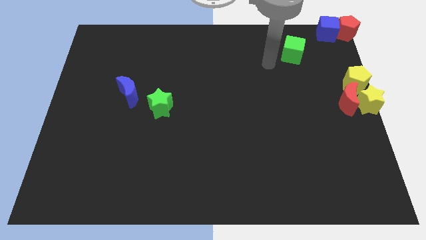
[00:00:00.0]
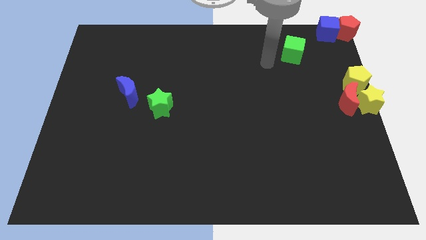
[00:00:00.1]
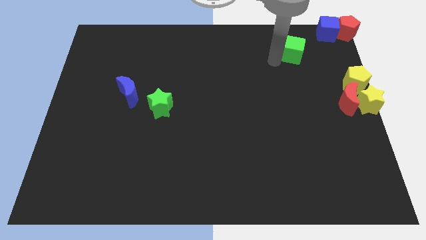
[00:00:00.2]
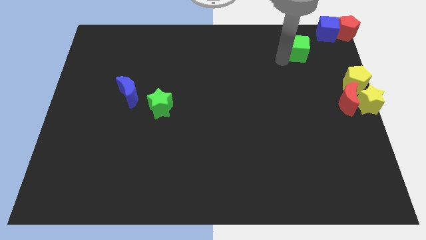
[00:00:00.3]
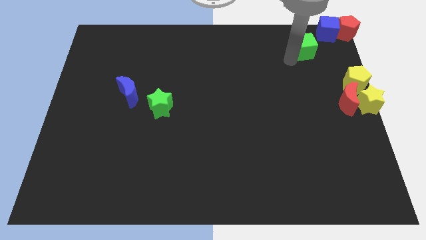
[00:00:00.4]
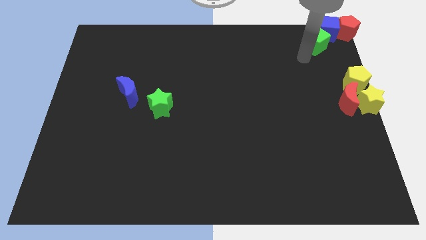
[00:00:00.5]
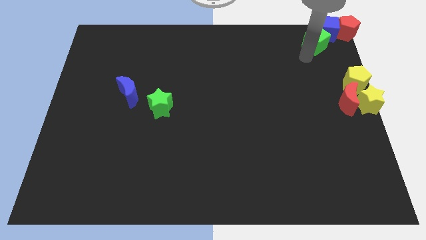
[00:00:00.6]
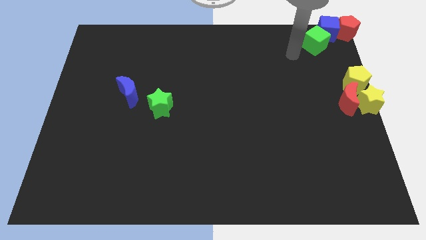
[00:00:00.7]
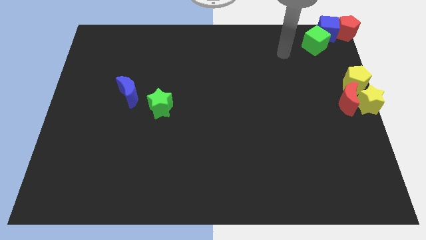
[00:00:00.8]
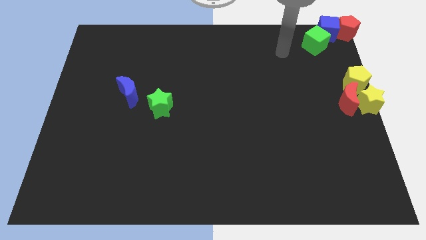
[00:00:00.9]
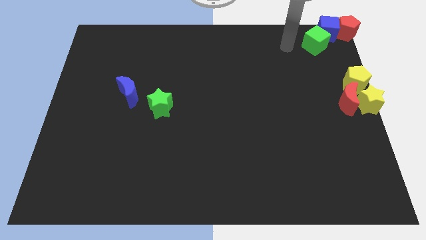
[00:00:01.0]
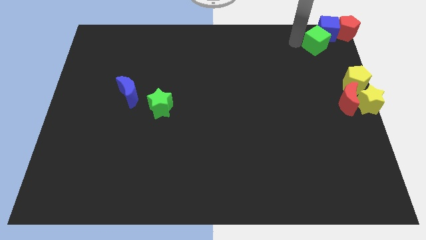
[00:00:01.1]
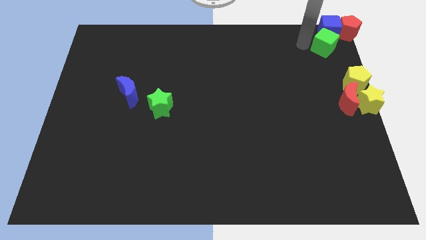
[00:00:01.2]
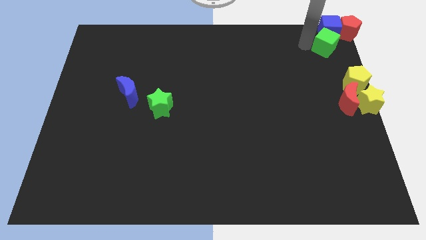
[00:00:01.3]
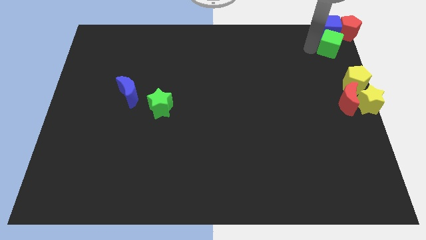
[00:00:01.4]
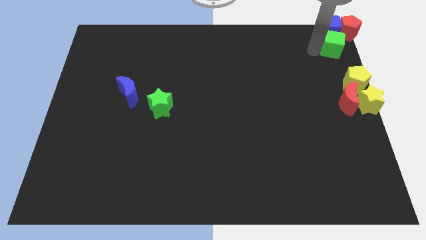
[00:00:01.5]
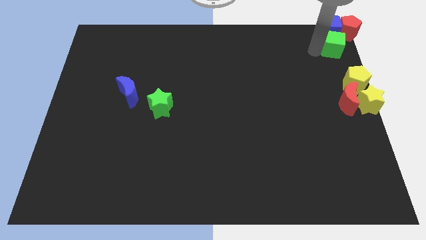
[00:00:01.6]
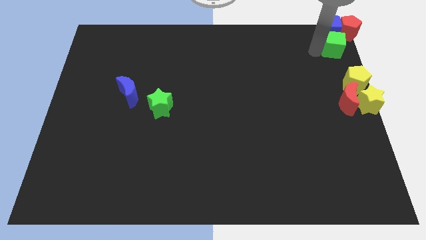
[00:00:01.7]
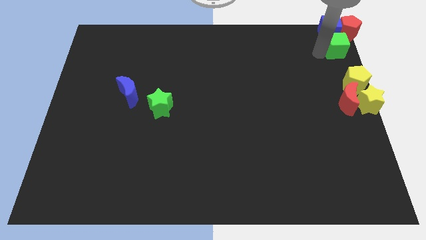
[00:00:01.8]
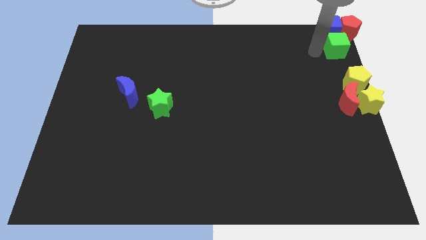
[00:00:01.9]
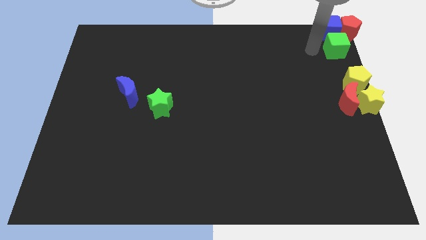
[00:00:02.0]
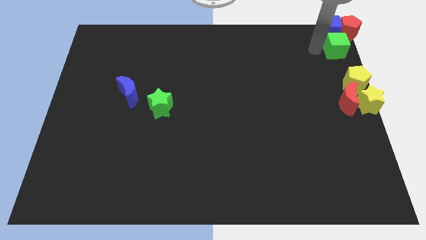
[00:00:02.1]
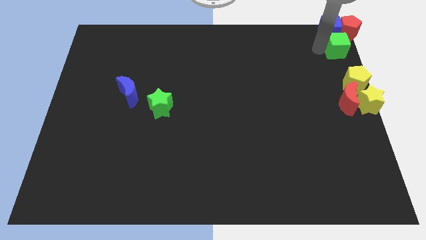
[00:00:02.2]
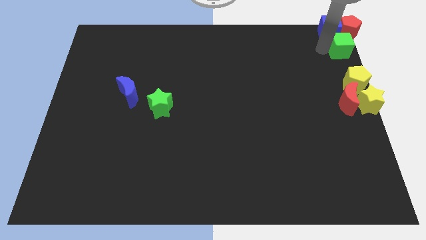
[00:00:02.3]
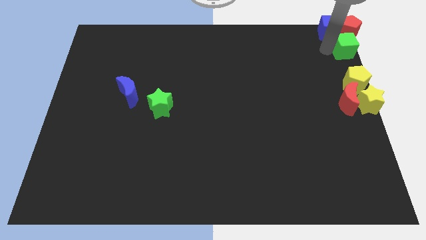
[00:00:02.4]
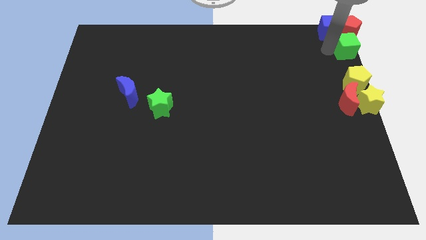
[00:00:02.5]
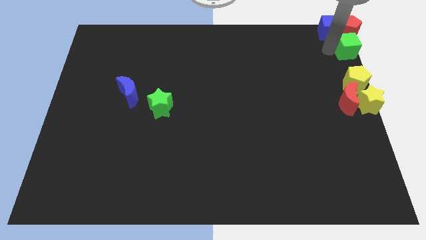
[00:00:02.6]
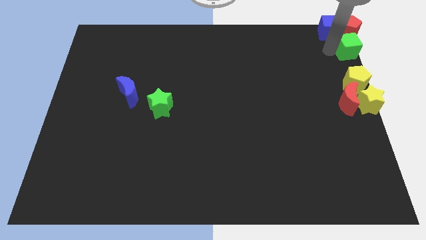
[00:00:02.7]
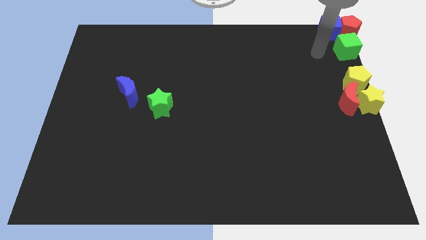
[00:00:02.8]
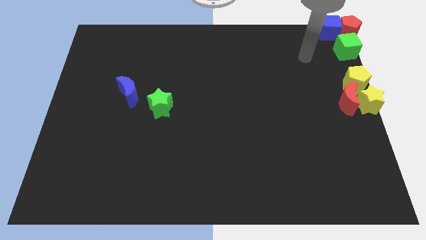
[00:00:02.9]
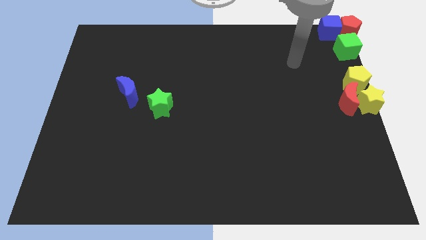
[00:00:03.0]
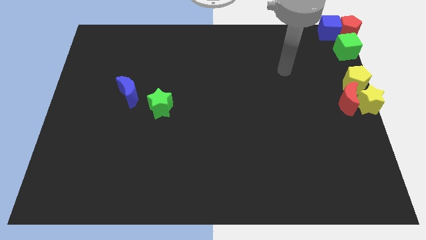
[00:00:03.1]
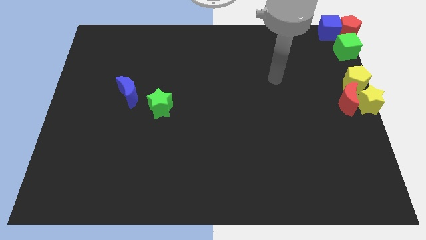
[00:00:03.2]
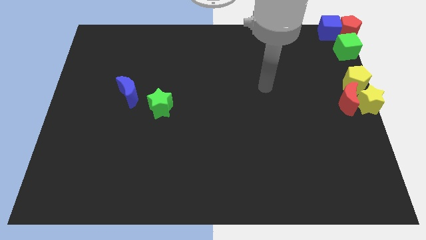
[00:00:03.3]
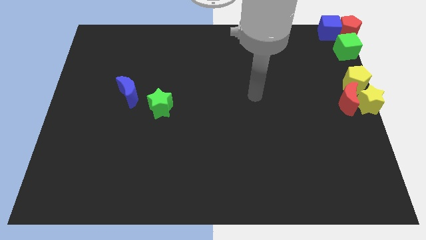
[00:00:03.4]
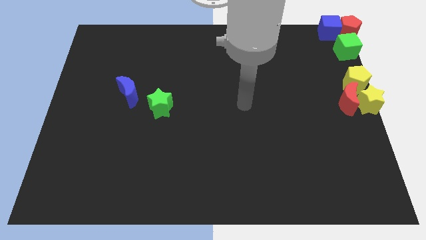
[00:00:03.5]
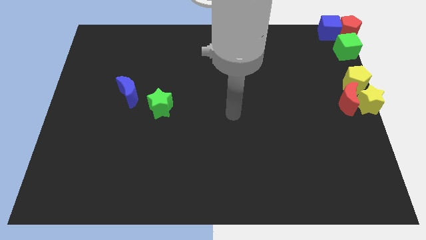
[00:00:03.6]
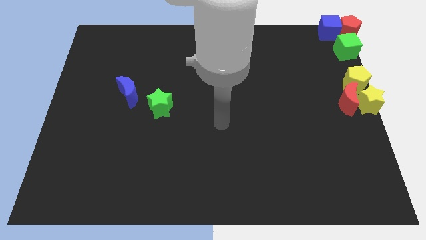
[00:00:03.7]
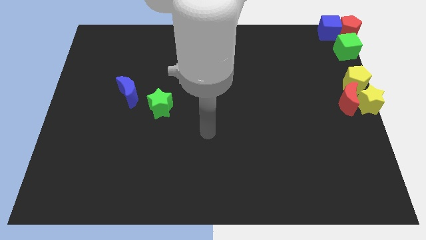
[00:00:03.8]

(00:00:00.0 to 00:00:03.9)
place the green cube in between the pentagons

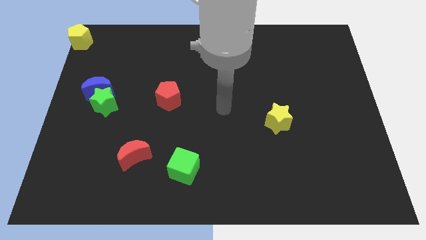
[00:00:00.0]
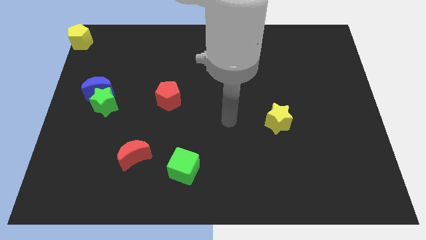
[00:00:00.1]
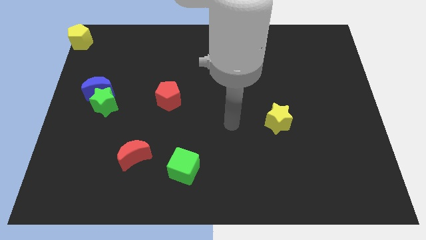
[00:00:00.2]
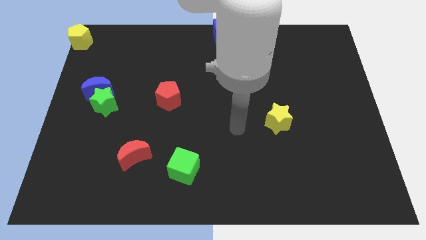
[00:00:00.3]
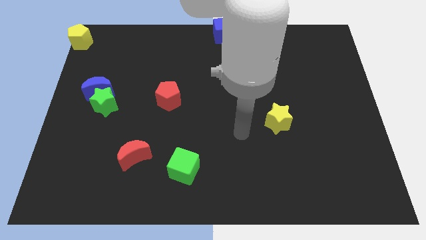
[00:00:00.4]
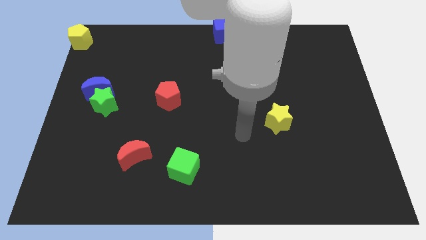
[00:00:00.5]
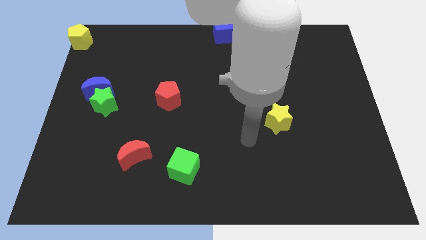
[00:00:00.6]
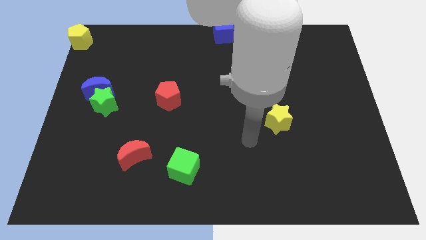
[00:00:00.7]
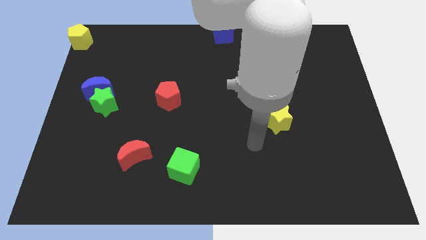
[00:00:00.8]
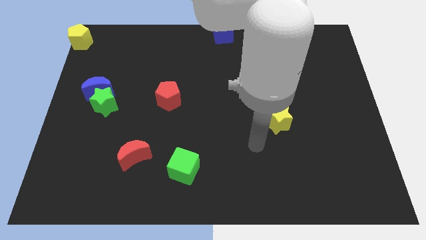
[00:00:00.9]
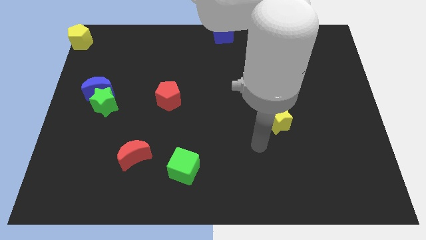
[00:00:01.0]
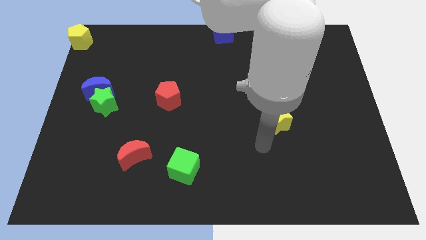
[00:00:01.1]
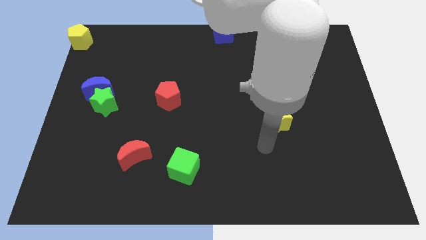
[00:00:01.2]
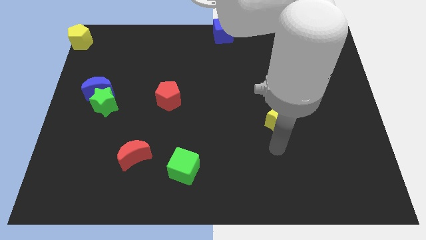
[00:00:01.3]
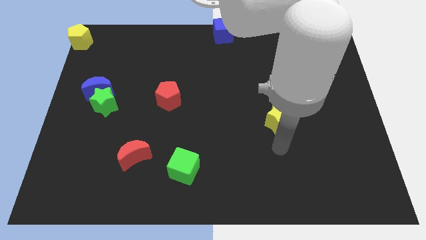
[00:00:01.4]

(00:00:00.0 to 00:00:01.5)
point your arm at the bottom of the yellow star

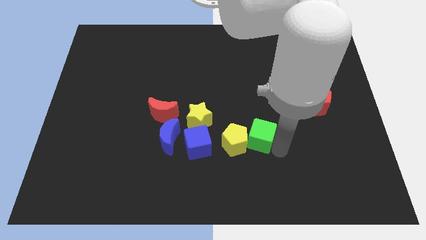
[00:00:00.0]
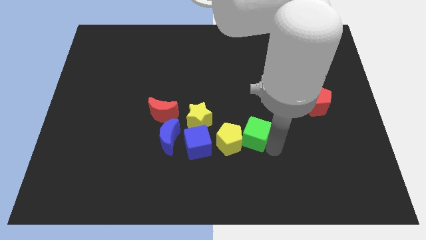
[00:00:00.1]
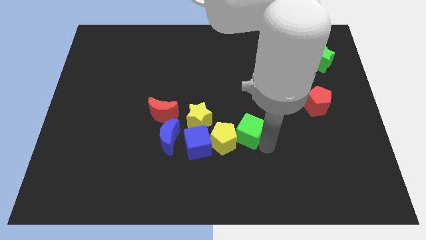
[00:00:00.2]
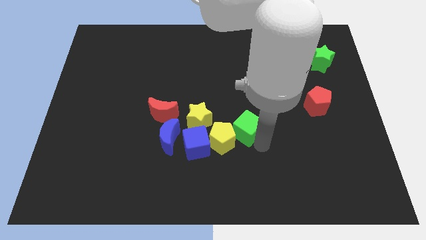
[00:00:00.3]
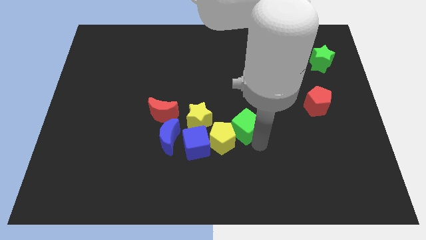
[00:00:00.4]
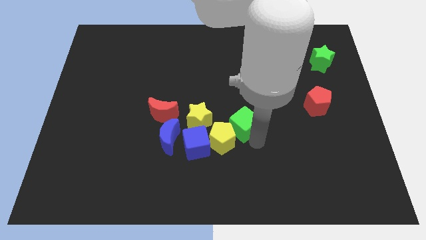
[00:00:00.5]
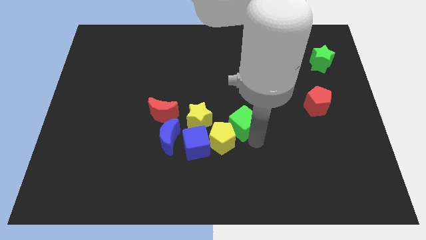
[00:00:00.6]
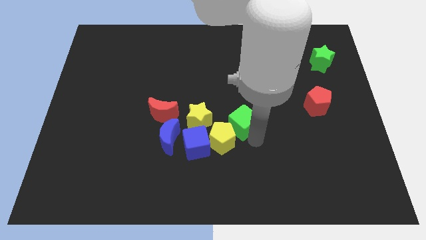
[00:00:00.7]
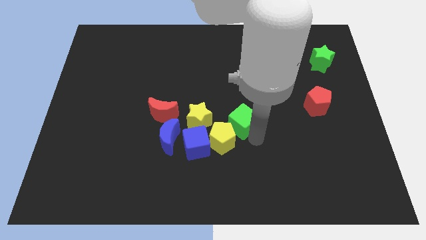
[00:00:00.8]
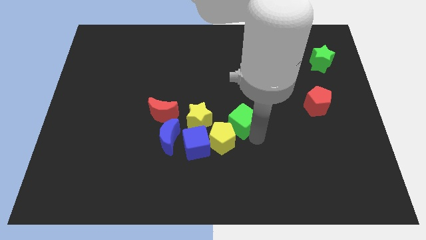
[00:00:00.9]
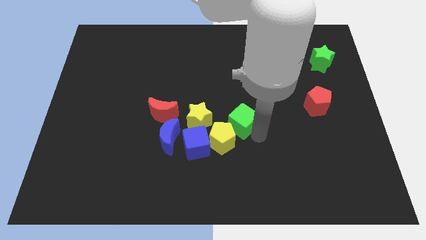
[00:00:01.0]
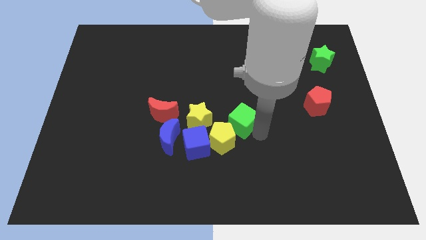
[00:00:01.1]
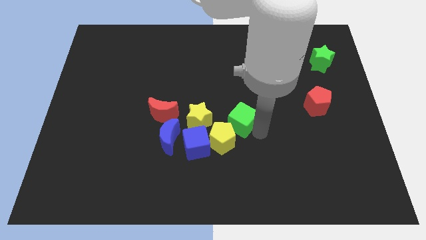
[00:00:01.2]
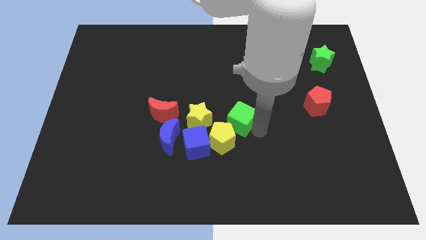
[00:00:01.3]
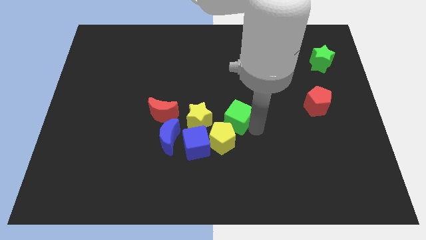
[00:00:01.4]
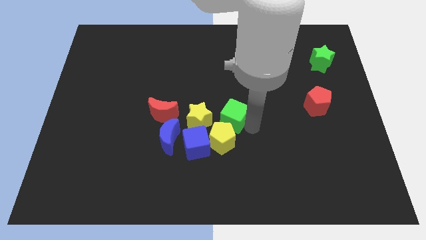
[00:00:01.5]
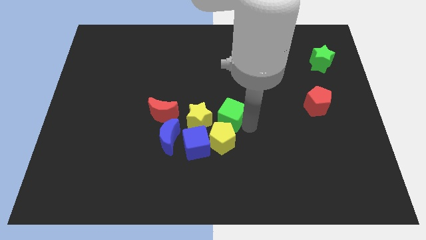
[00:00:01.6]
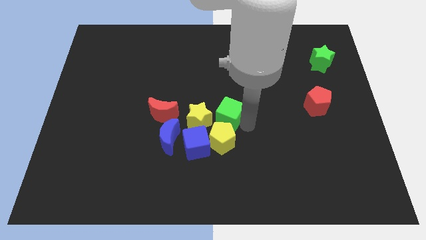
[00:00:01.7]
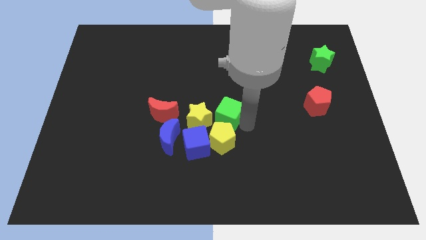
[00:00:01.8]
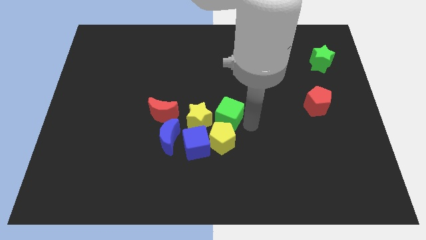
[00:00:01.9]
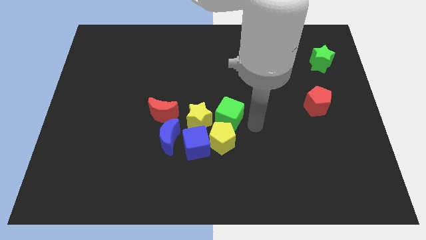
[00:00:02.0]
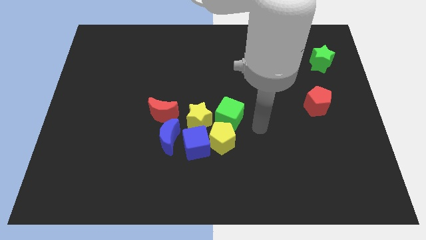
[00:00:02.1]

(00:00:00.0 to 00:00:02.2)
move the green cube towards the right side of yellow star

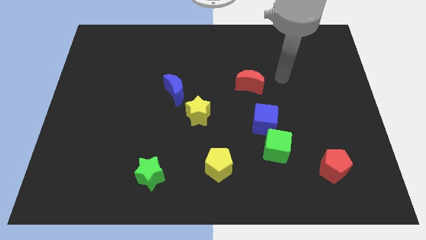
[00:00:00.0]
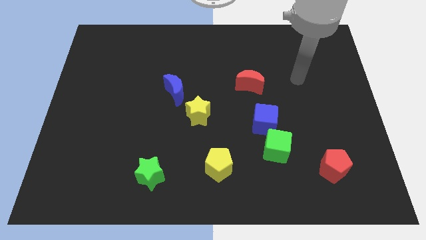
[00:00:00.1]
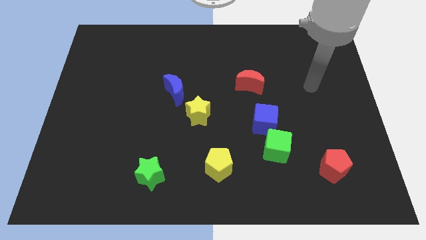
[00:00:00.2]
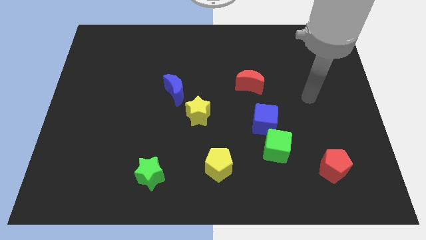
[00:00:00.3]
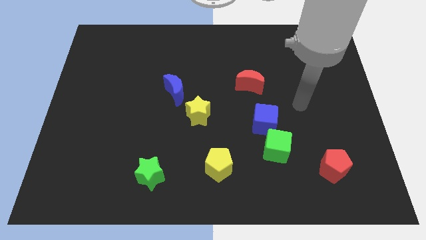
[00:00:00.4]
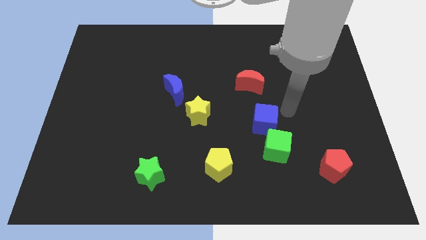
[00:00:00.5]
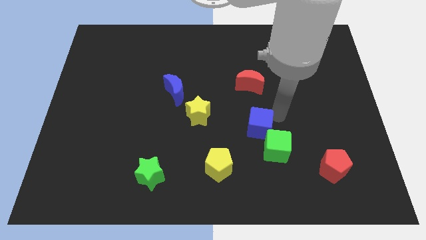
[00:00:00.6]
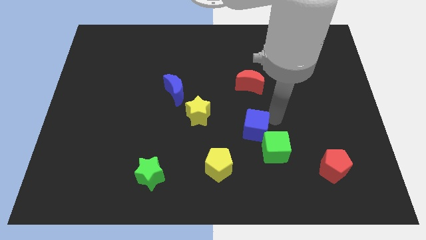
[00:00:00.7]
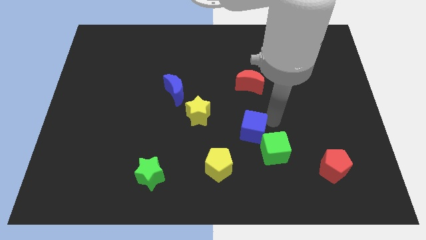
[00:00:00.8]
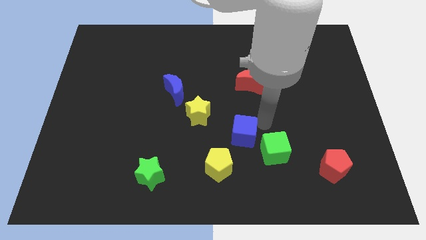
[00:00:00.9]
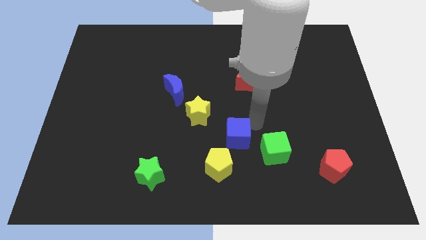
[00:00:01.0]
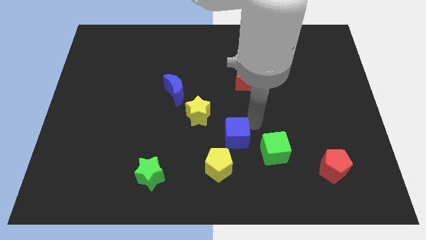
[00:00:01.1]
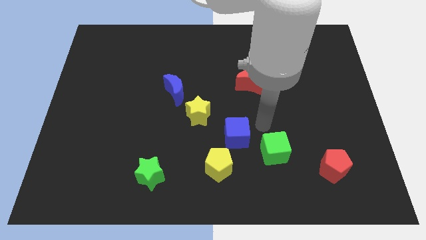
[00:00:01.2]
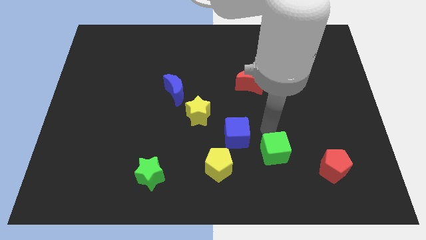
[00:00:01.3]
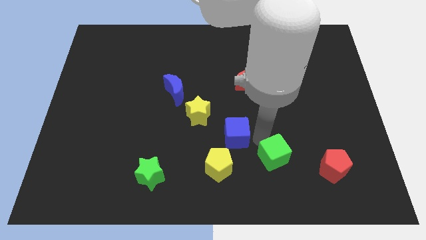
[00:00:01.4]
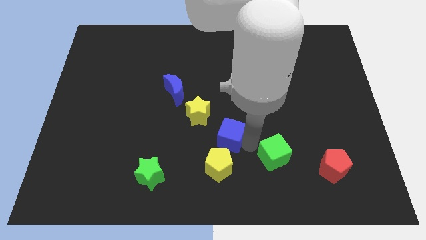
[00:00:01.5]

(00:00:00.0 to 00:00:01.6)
separate the blue cube and the green cube
